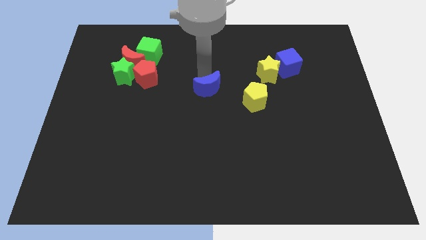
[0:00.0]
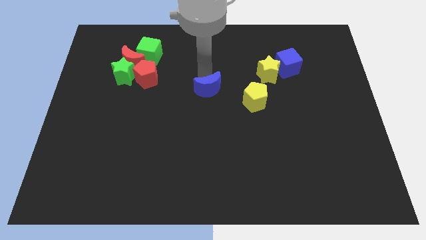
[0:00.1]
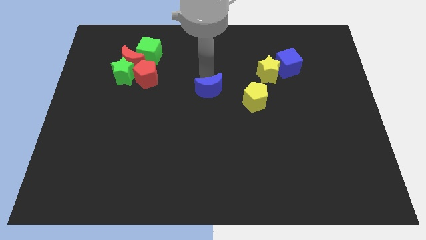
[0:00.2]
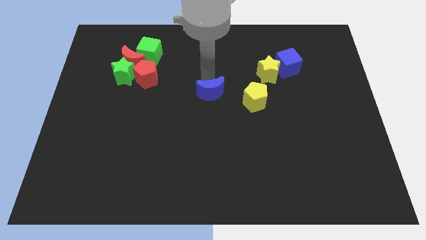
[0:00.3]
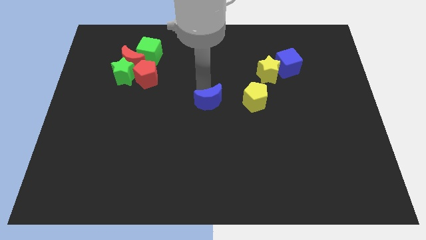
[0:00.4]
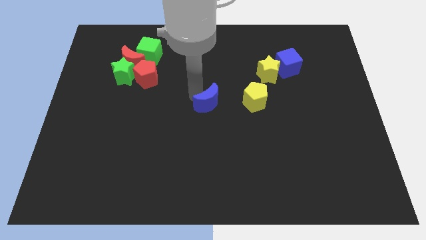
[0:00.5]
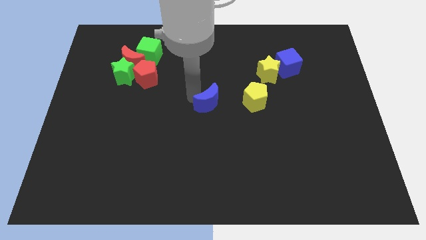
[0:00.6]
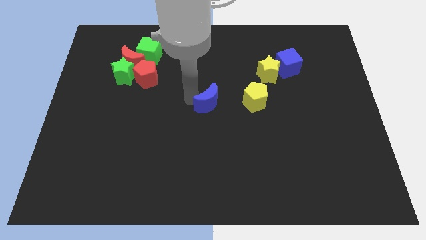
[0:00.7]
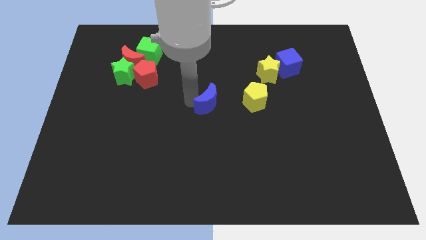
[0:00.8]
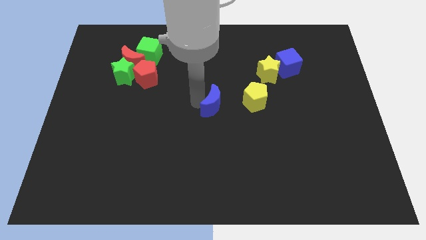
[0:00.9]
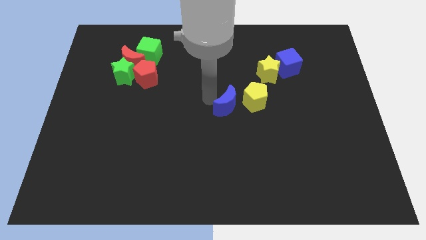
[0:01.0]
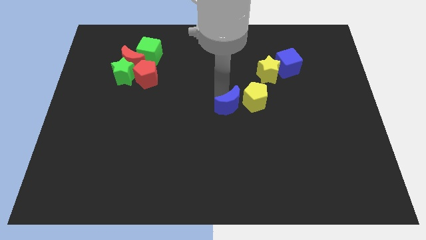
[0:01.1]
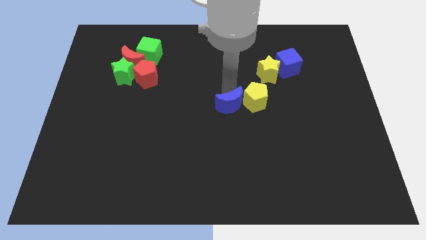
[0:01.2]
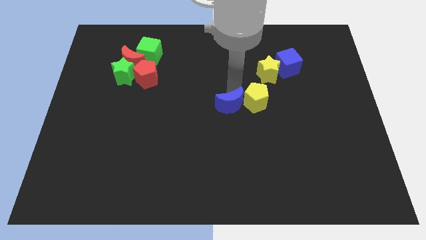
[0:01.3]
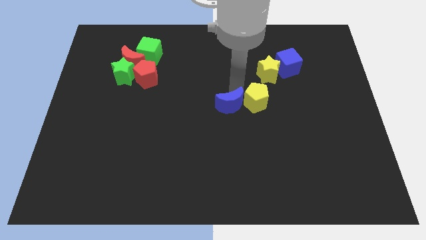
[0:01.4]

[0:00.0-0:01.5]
make the blue crescent to touch the yellow pentagon

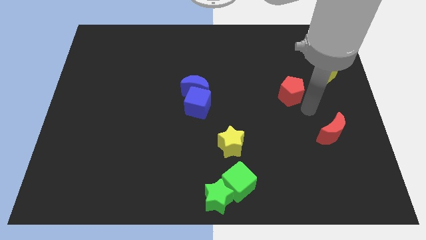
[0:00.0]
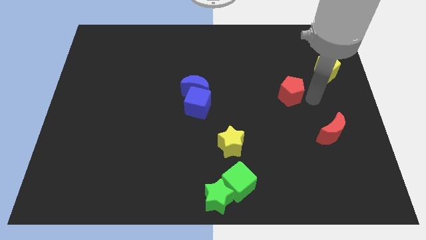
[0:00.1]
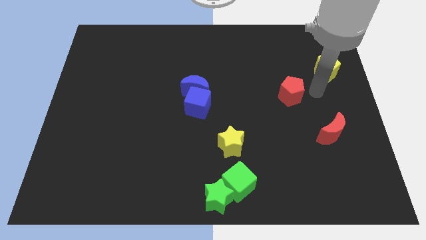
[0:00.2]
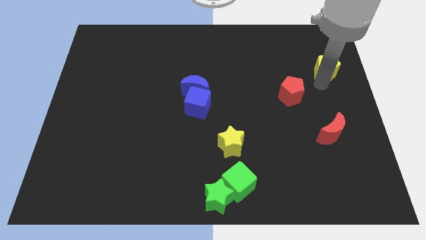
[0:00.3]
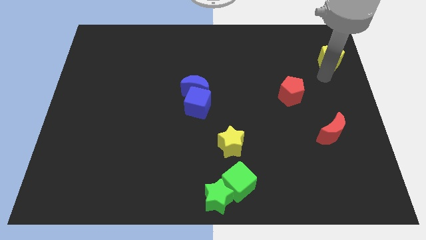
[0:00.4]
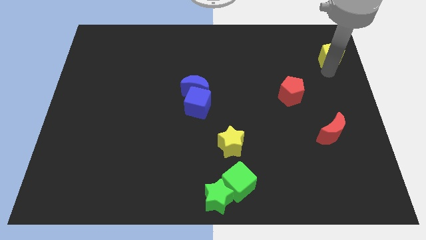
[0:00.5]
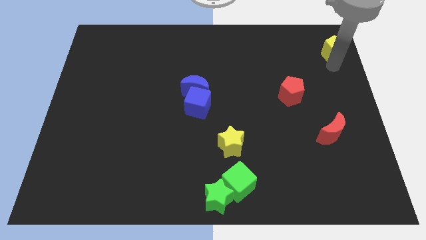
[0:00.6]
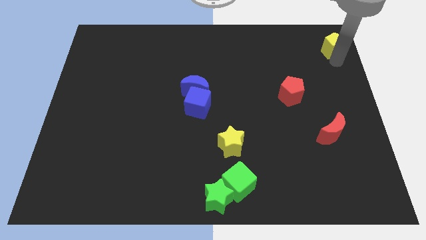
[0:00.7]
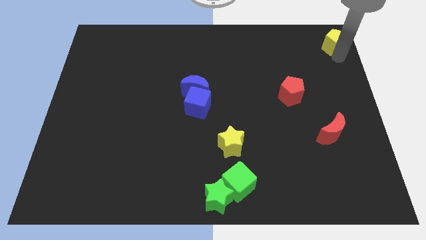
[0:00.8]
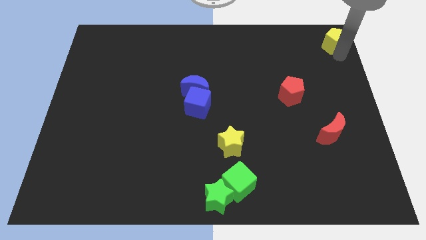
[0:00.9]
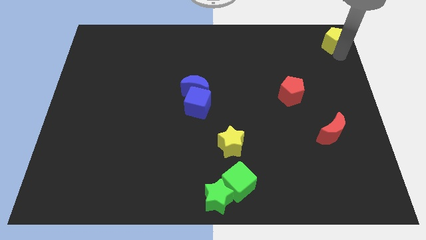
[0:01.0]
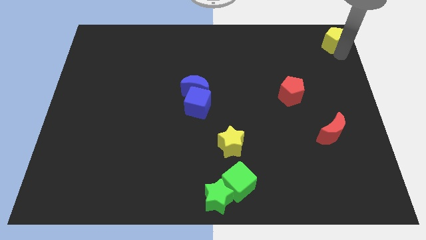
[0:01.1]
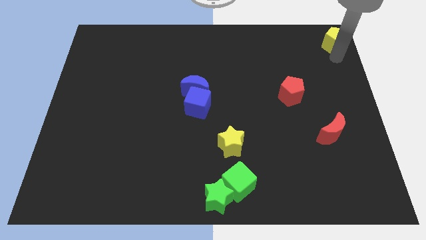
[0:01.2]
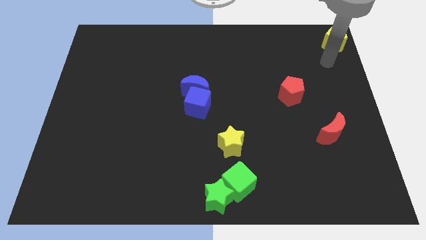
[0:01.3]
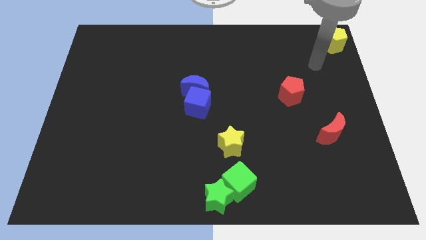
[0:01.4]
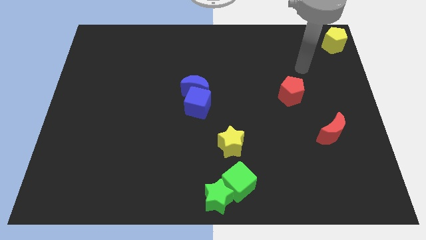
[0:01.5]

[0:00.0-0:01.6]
move the yellow pentagon to the top right corner

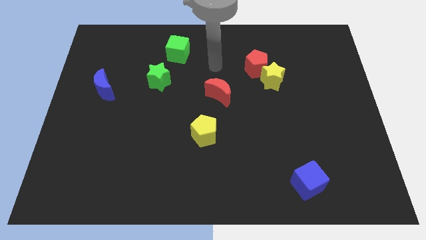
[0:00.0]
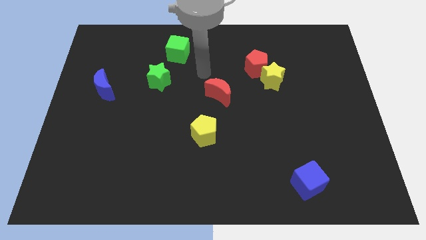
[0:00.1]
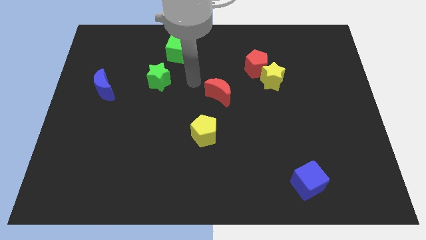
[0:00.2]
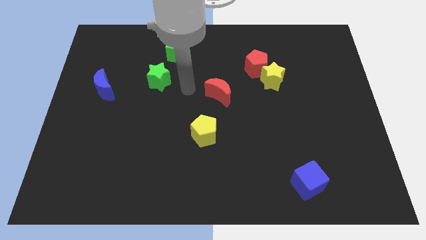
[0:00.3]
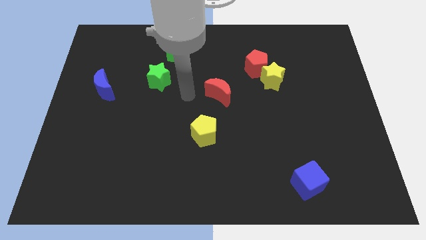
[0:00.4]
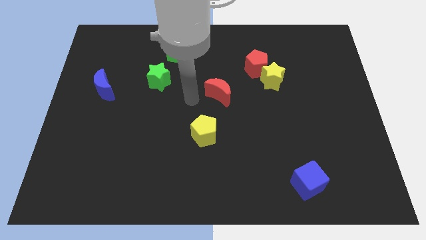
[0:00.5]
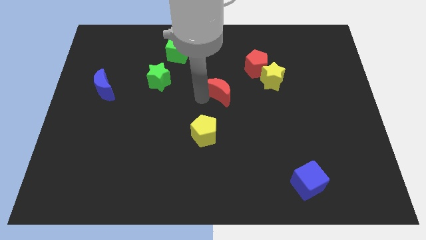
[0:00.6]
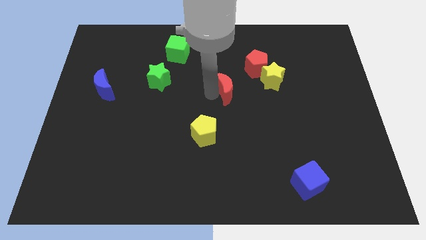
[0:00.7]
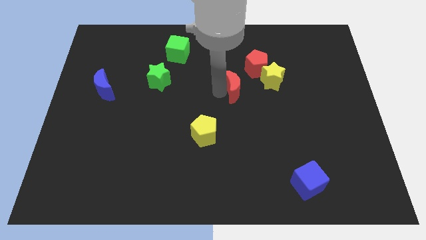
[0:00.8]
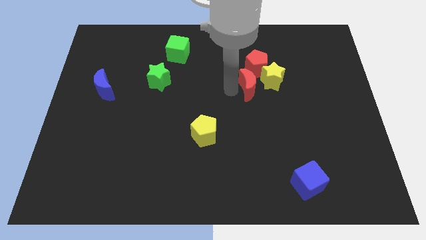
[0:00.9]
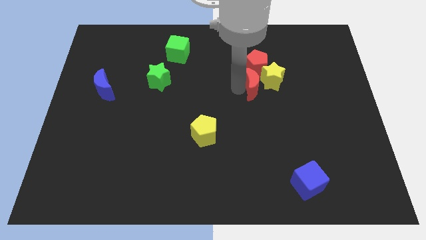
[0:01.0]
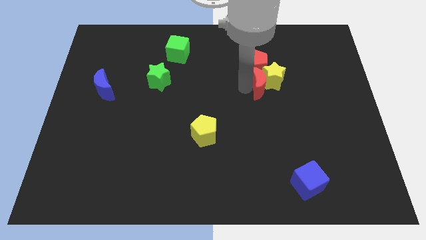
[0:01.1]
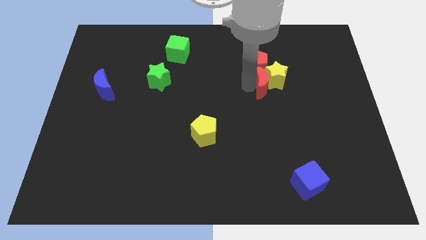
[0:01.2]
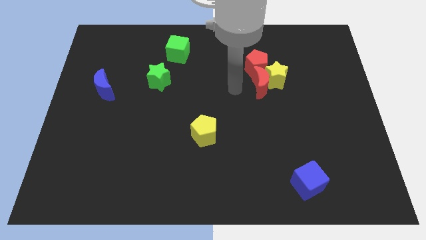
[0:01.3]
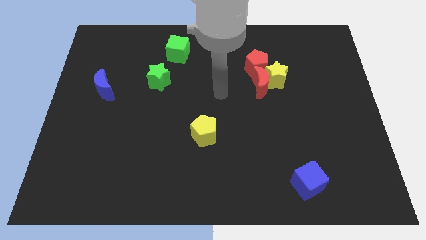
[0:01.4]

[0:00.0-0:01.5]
push the red crescent into the yellow star

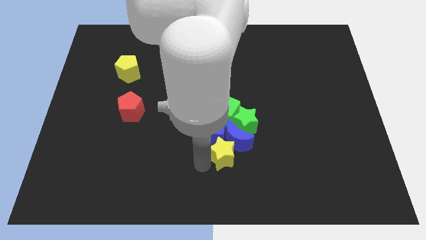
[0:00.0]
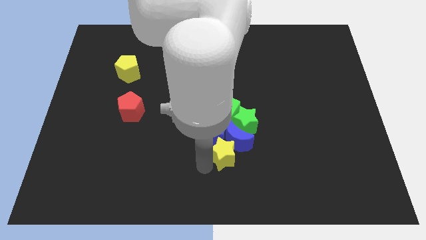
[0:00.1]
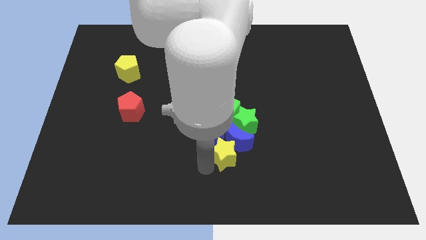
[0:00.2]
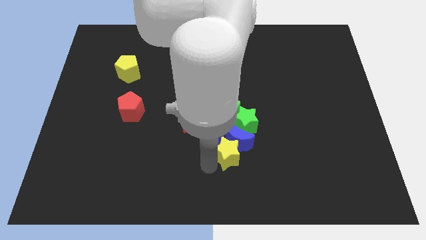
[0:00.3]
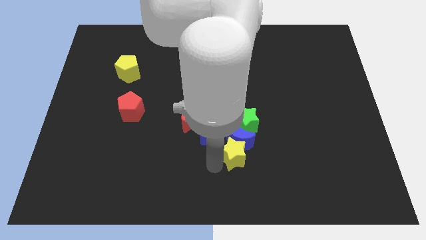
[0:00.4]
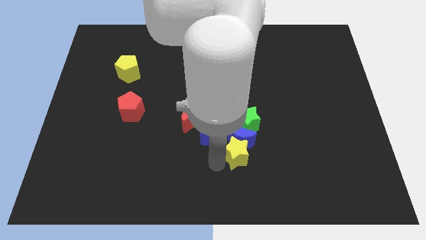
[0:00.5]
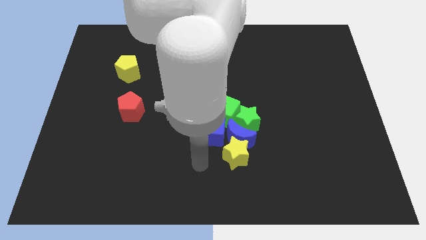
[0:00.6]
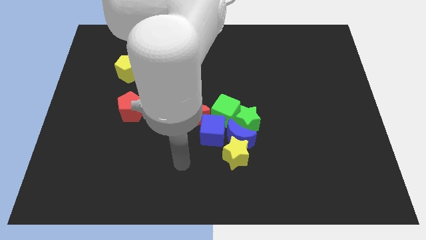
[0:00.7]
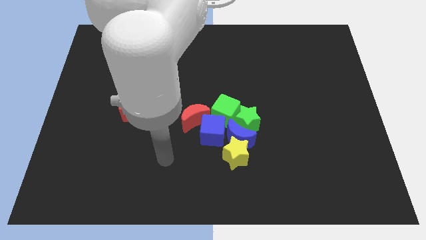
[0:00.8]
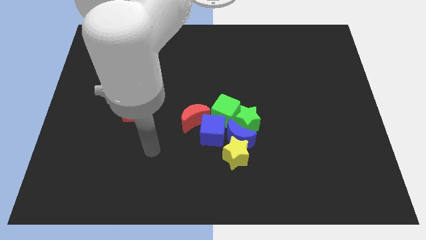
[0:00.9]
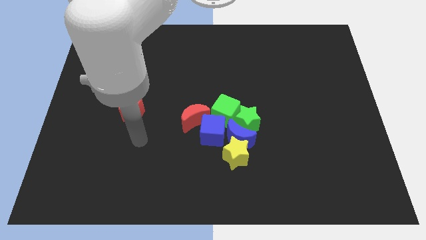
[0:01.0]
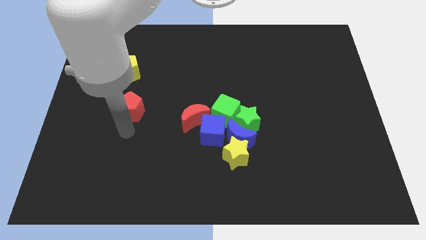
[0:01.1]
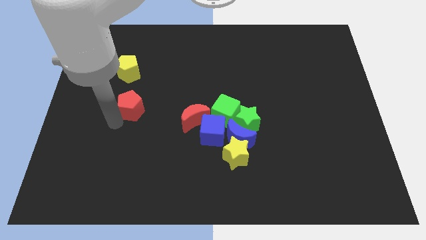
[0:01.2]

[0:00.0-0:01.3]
place yellow star below the blue moon

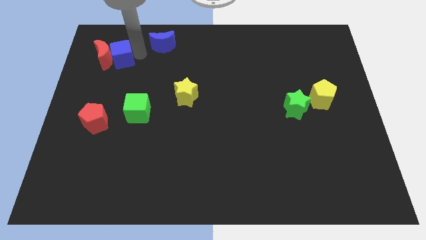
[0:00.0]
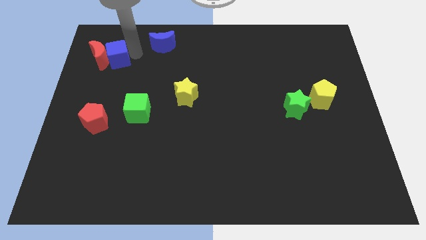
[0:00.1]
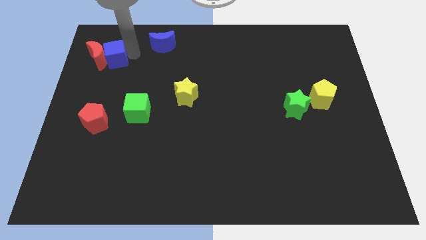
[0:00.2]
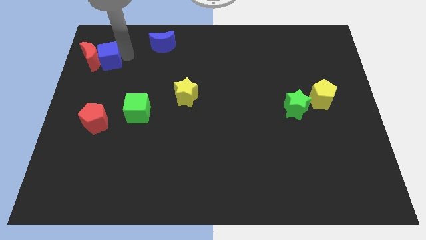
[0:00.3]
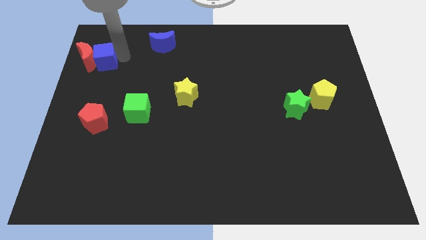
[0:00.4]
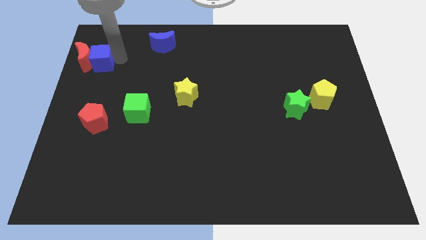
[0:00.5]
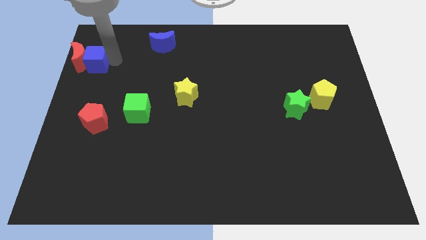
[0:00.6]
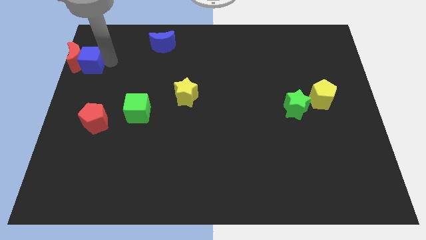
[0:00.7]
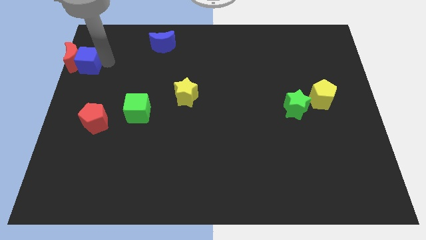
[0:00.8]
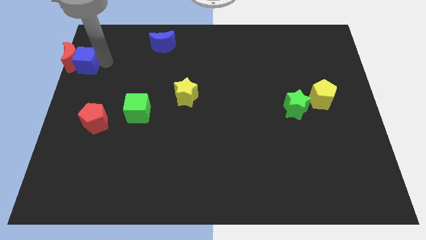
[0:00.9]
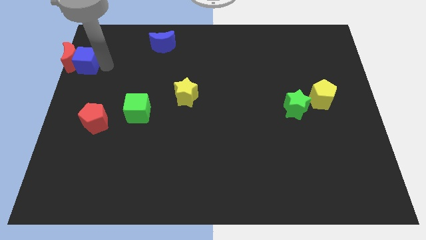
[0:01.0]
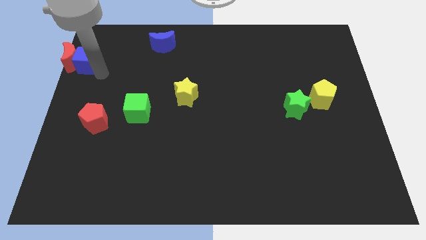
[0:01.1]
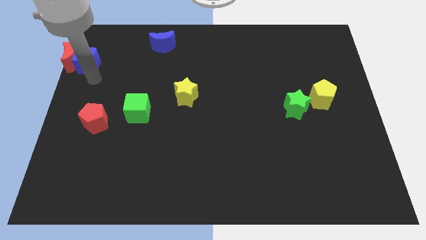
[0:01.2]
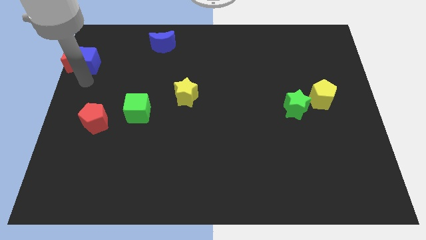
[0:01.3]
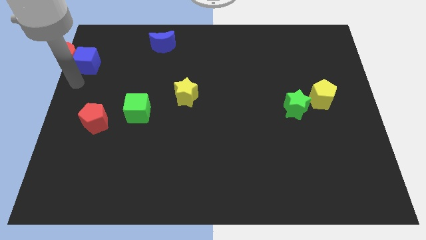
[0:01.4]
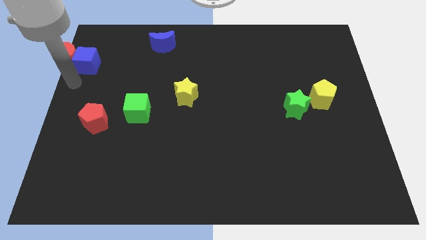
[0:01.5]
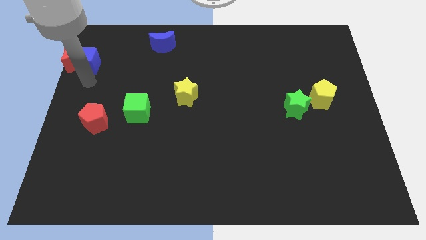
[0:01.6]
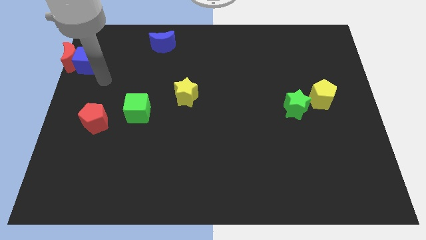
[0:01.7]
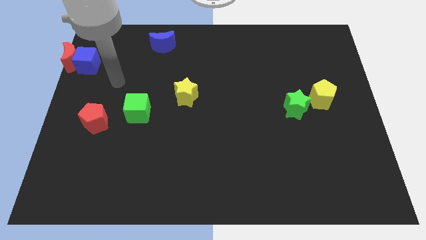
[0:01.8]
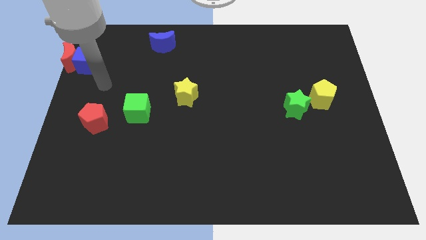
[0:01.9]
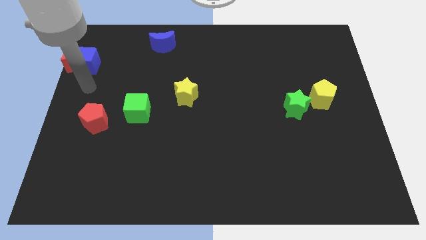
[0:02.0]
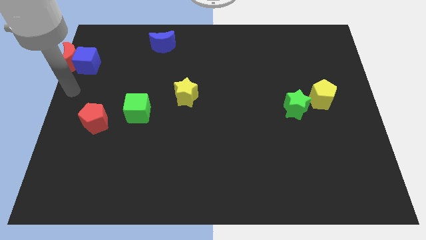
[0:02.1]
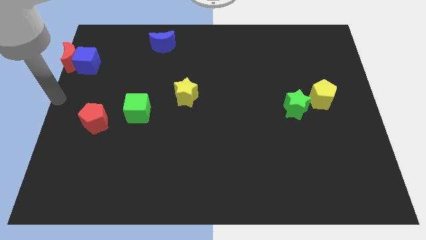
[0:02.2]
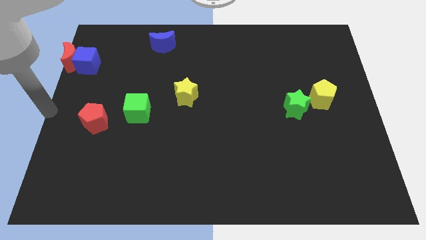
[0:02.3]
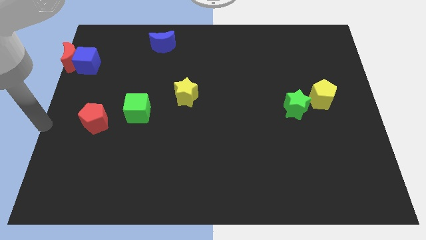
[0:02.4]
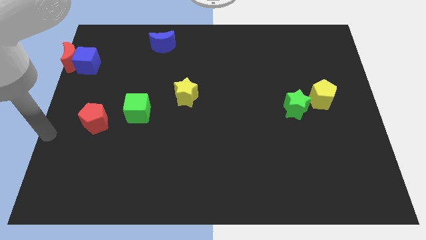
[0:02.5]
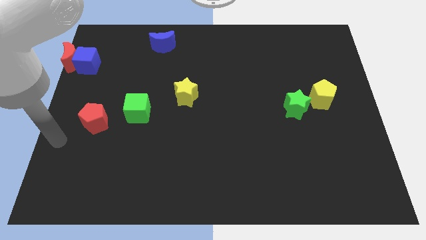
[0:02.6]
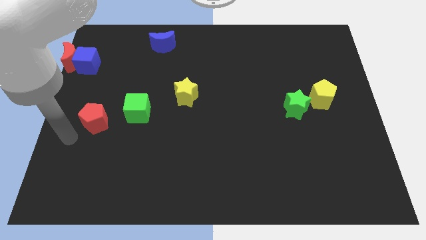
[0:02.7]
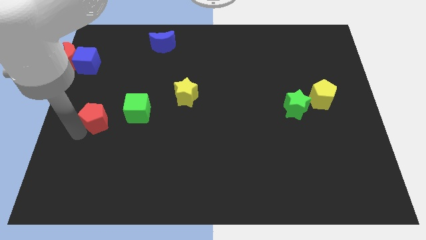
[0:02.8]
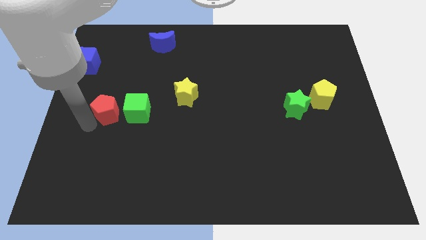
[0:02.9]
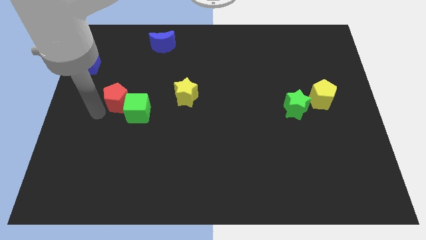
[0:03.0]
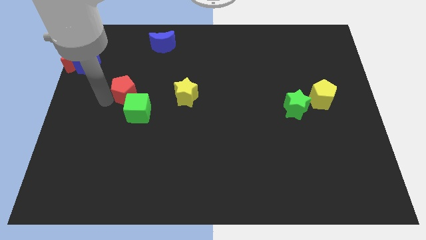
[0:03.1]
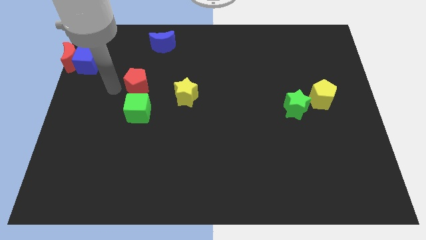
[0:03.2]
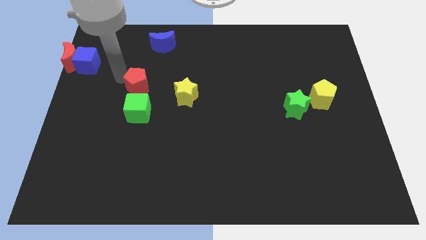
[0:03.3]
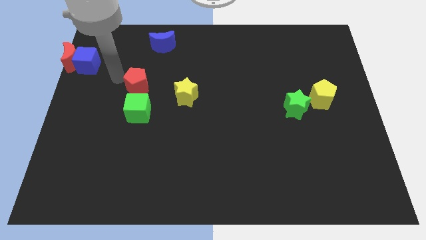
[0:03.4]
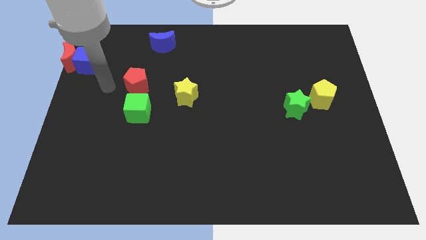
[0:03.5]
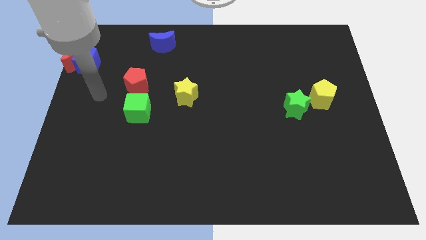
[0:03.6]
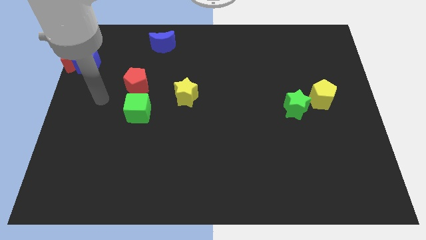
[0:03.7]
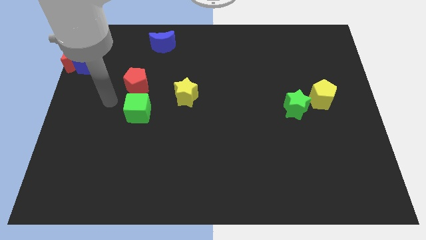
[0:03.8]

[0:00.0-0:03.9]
push the red pentagon to the top side of the green cube
